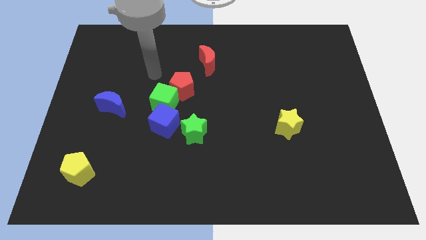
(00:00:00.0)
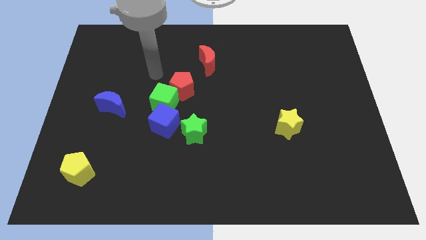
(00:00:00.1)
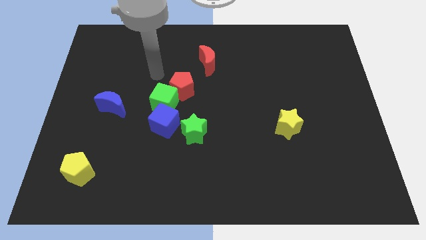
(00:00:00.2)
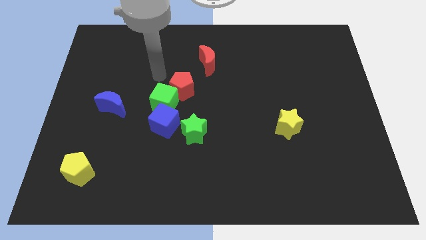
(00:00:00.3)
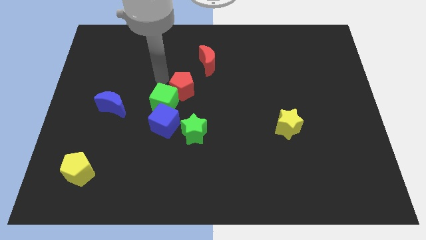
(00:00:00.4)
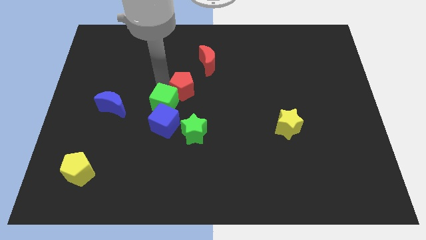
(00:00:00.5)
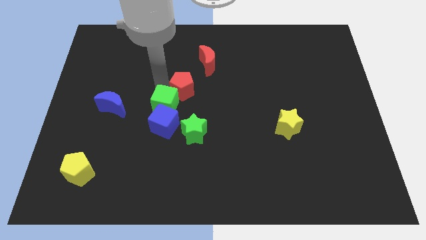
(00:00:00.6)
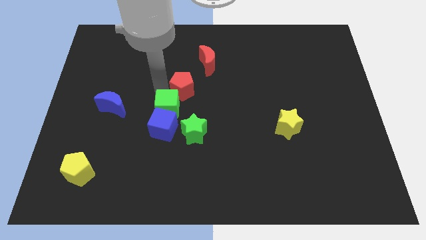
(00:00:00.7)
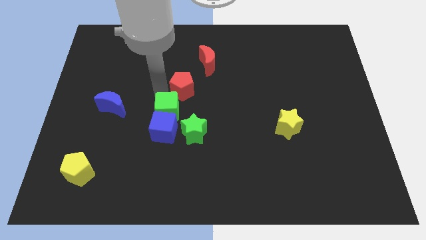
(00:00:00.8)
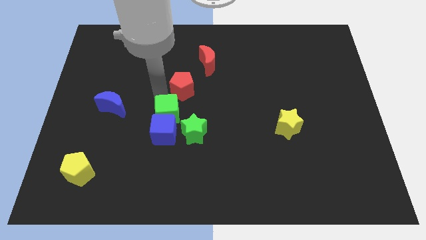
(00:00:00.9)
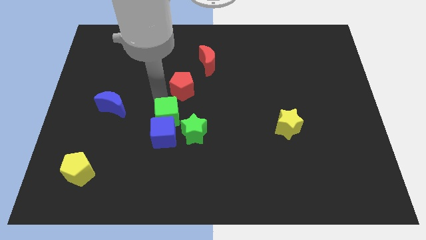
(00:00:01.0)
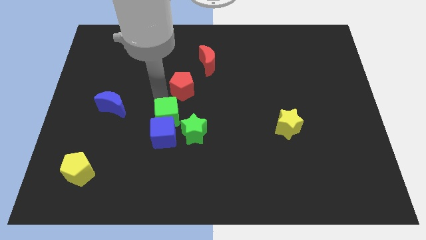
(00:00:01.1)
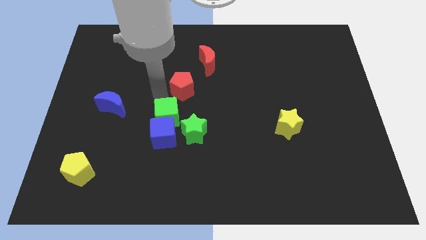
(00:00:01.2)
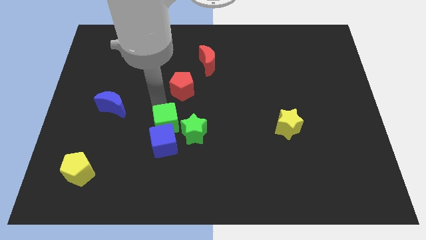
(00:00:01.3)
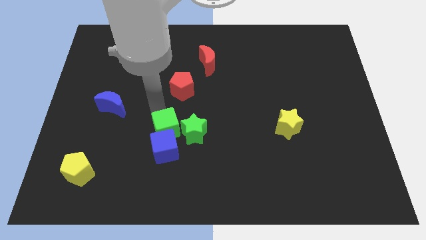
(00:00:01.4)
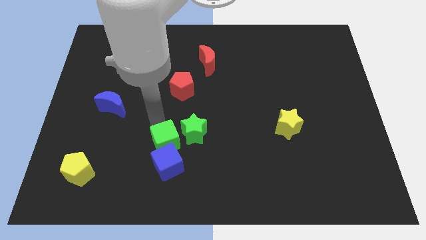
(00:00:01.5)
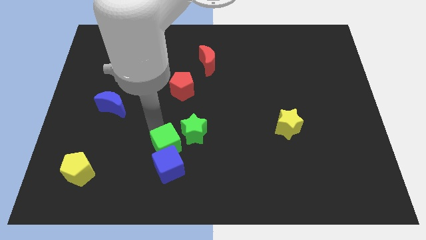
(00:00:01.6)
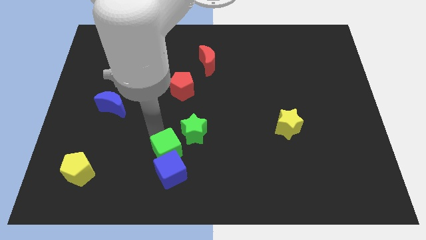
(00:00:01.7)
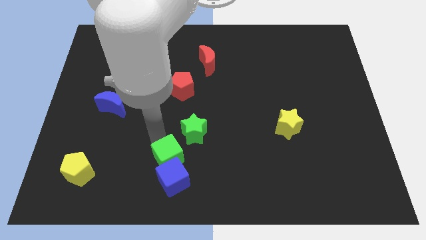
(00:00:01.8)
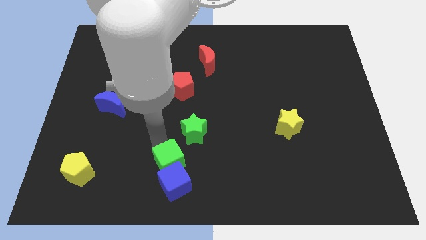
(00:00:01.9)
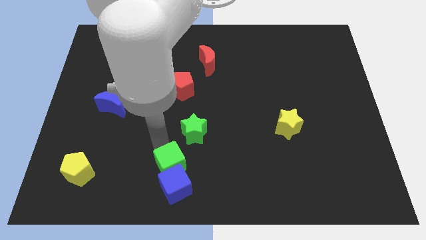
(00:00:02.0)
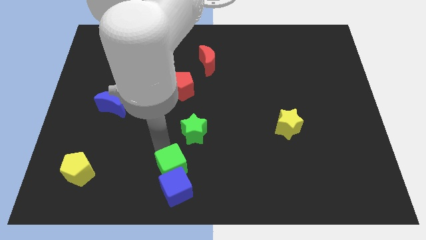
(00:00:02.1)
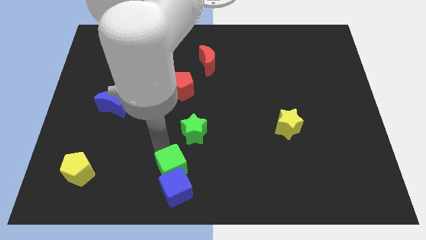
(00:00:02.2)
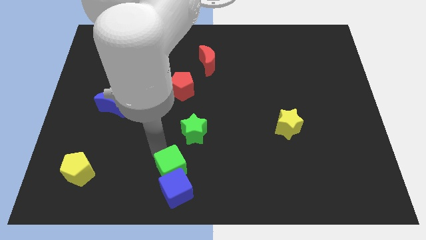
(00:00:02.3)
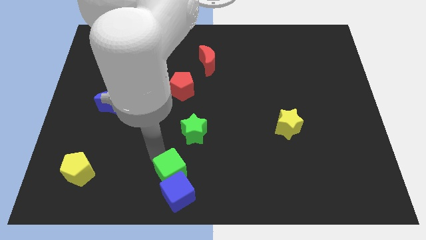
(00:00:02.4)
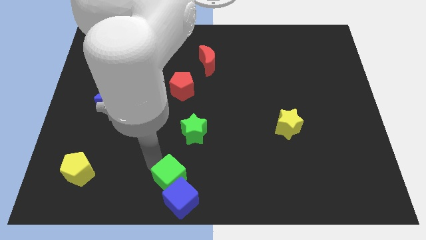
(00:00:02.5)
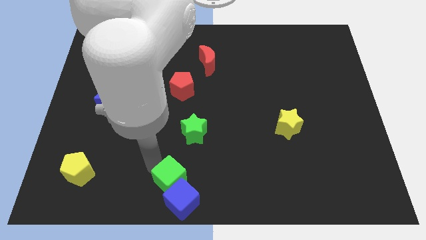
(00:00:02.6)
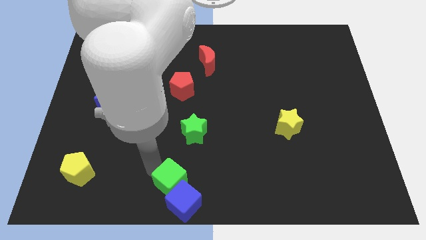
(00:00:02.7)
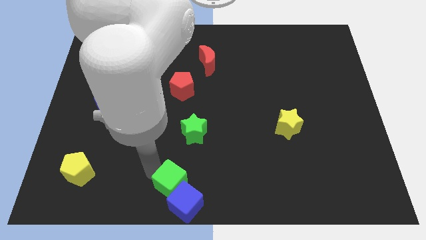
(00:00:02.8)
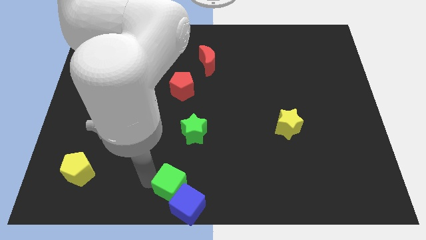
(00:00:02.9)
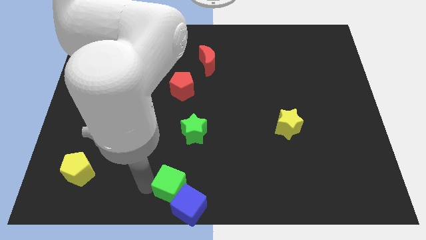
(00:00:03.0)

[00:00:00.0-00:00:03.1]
move the blue cube and green cube towards the bottom centre of the board

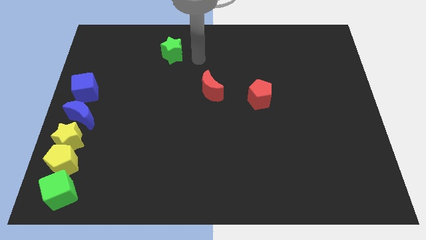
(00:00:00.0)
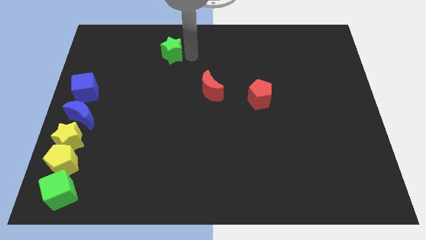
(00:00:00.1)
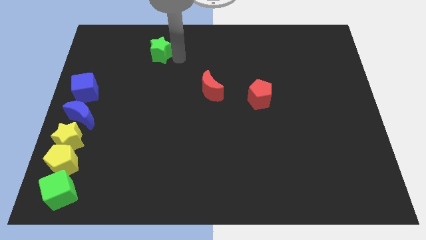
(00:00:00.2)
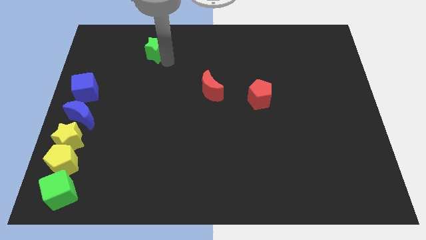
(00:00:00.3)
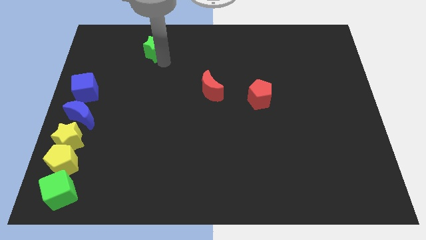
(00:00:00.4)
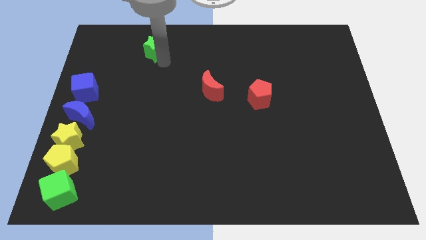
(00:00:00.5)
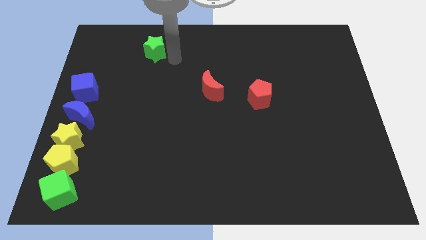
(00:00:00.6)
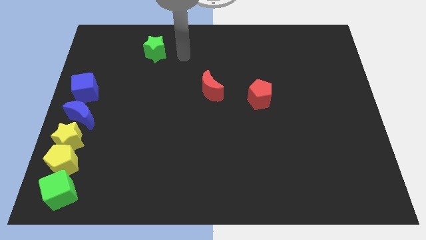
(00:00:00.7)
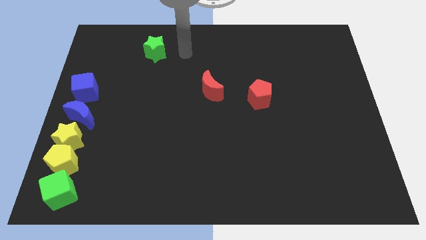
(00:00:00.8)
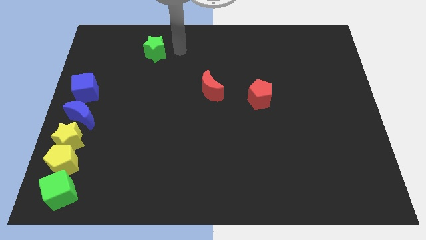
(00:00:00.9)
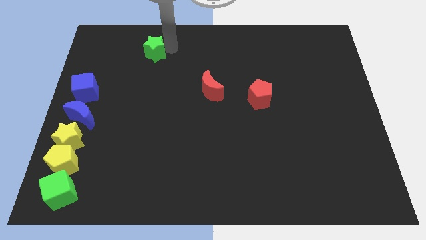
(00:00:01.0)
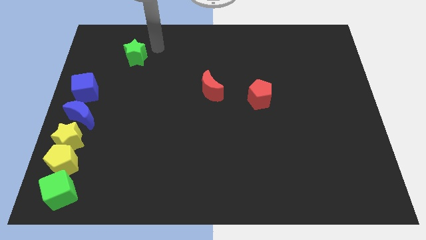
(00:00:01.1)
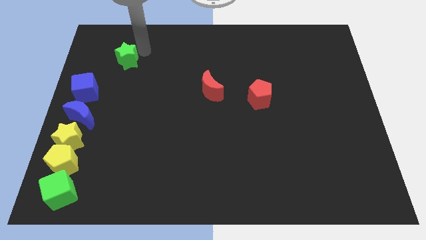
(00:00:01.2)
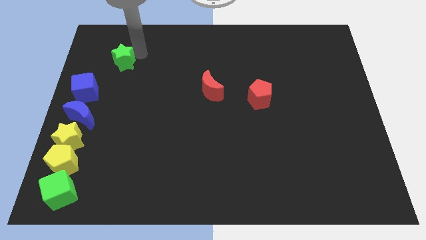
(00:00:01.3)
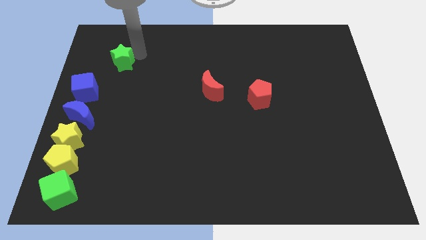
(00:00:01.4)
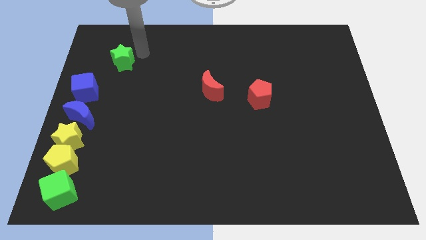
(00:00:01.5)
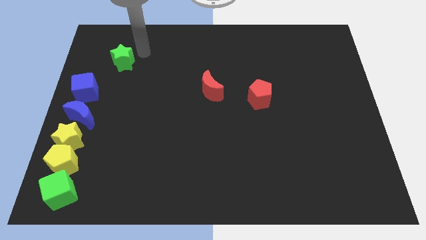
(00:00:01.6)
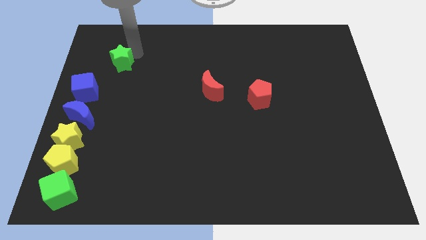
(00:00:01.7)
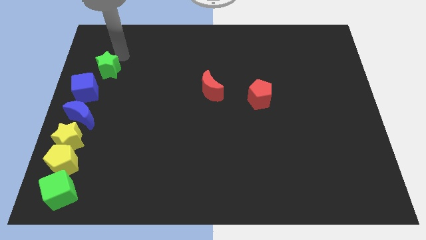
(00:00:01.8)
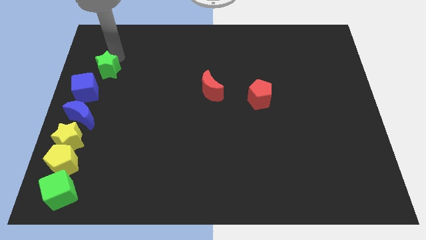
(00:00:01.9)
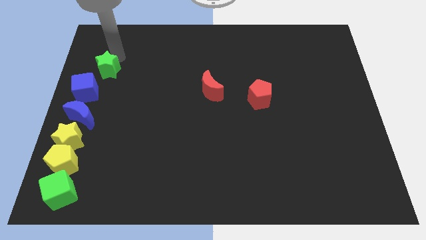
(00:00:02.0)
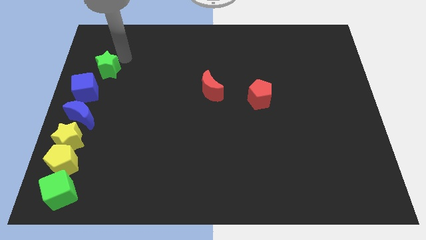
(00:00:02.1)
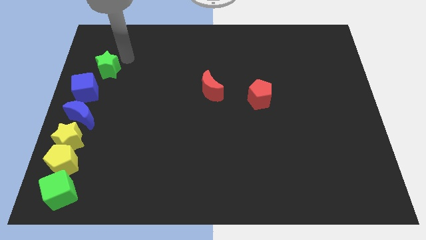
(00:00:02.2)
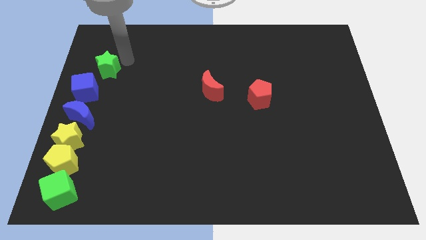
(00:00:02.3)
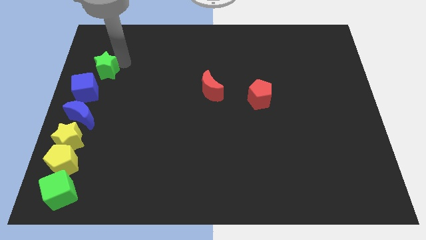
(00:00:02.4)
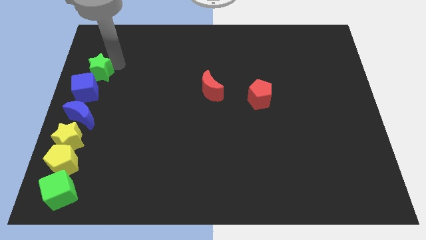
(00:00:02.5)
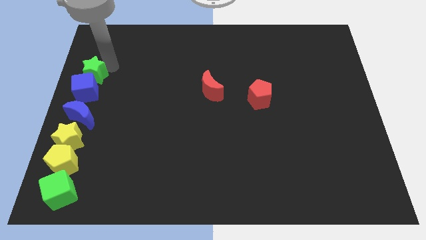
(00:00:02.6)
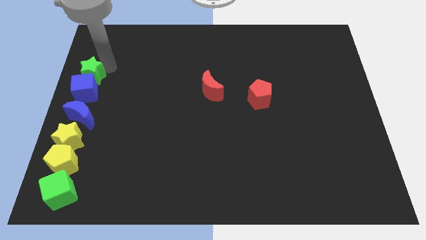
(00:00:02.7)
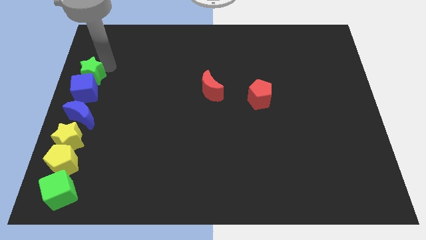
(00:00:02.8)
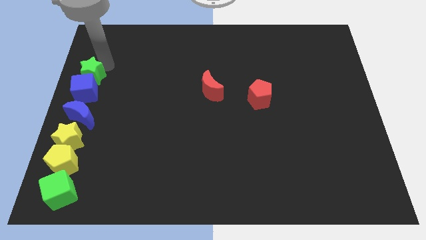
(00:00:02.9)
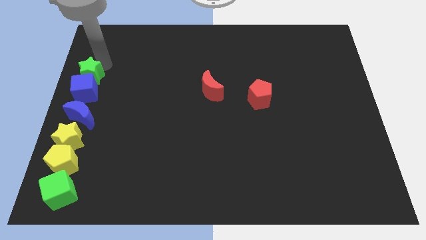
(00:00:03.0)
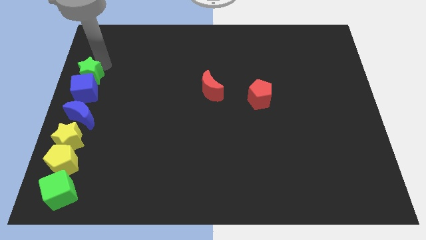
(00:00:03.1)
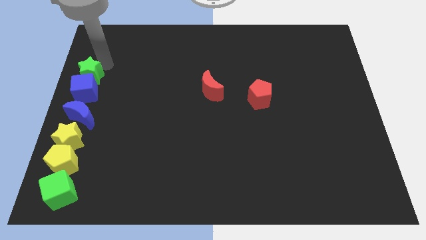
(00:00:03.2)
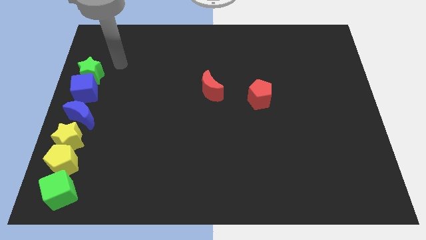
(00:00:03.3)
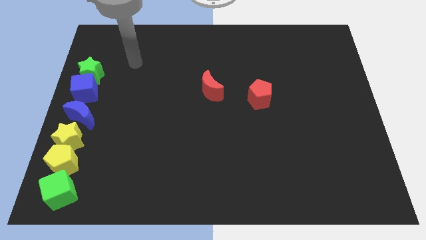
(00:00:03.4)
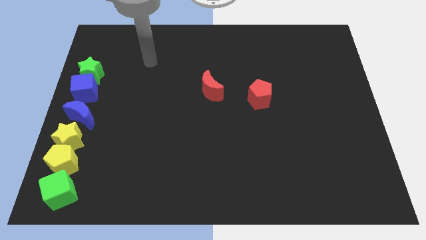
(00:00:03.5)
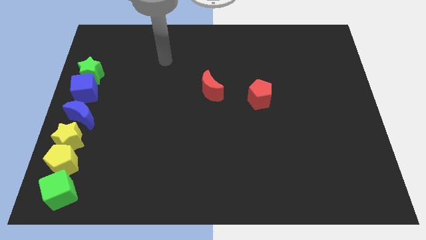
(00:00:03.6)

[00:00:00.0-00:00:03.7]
move green star to the top of blue cube

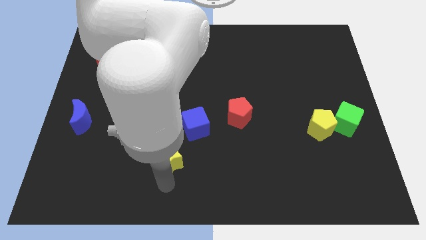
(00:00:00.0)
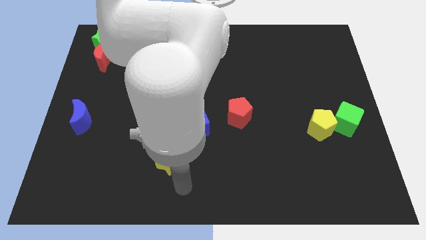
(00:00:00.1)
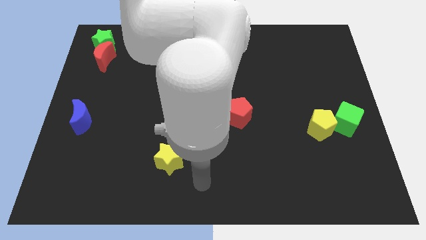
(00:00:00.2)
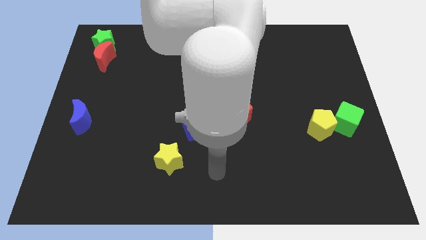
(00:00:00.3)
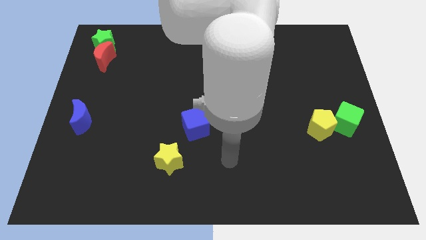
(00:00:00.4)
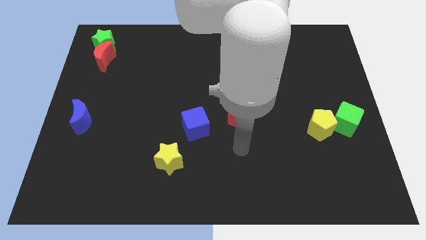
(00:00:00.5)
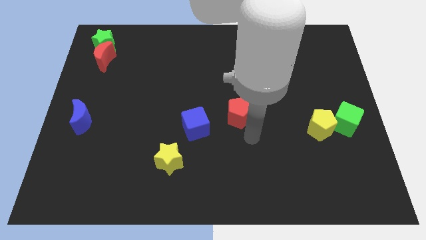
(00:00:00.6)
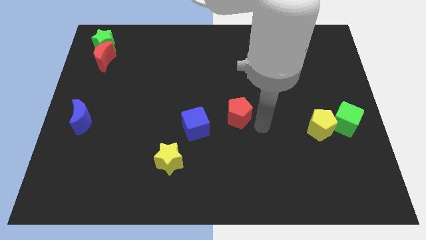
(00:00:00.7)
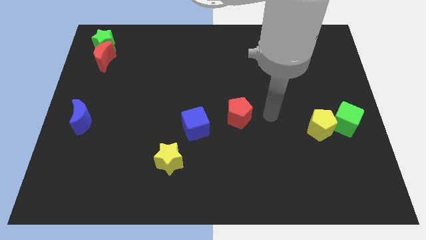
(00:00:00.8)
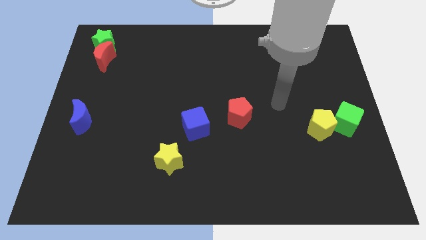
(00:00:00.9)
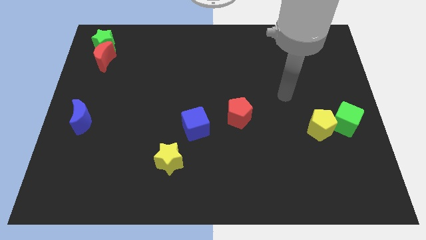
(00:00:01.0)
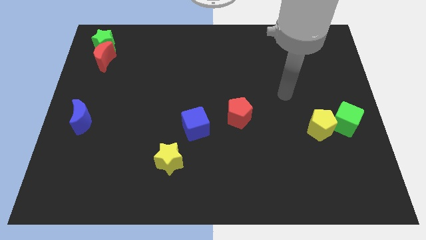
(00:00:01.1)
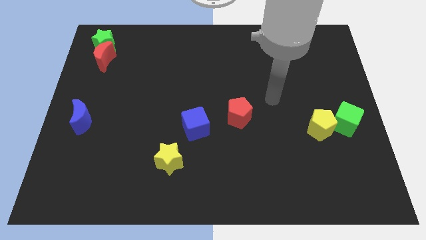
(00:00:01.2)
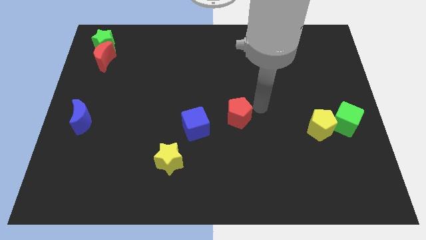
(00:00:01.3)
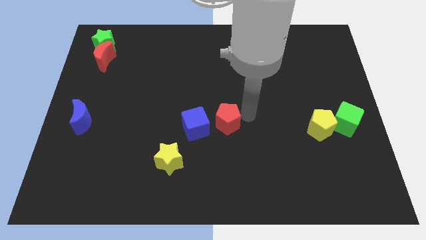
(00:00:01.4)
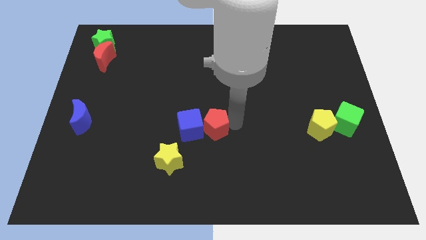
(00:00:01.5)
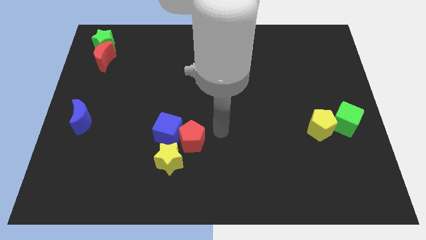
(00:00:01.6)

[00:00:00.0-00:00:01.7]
push the red pentagon into the blue cube

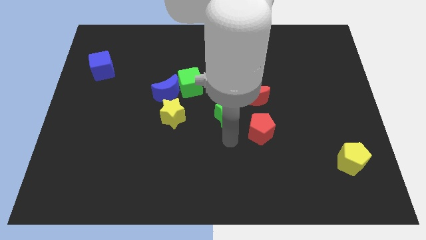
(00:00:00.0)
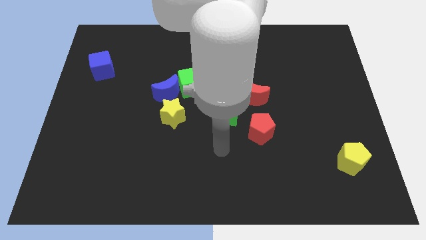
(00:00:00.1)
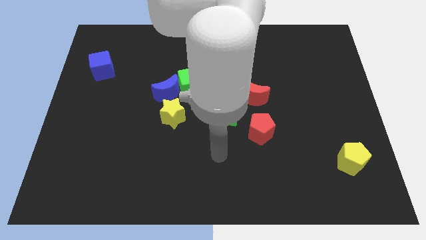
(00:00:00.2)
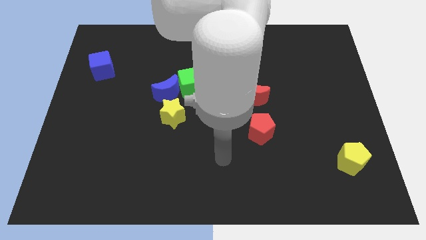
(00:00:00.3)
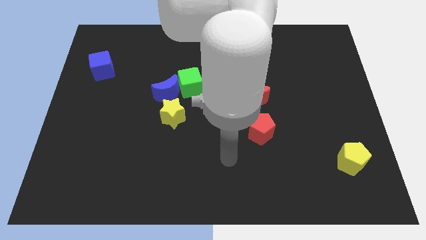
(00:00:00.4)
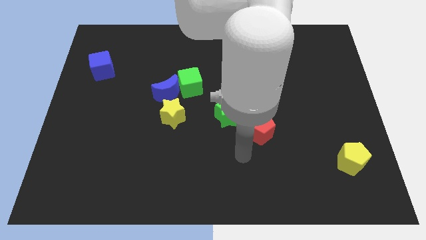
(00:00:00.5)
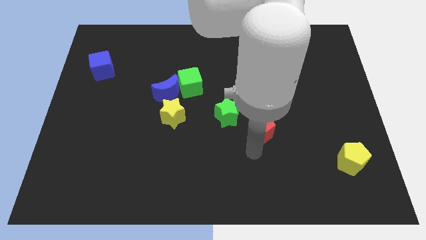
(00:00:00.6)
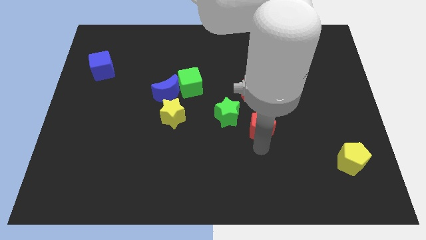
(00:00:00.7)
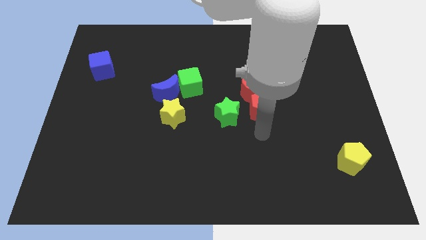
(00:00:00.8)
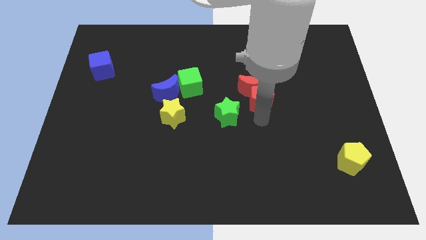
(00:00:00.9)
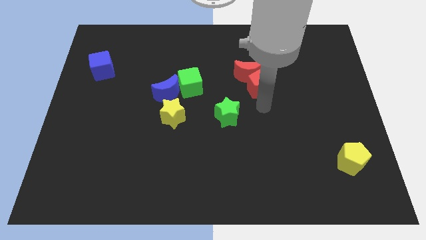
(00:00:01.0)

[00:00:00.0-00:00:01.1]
push red pentagon into red moon
